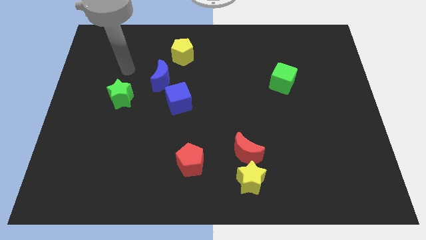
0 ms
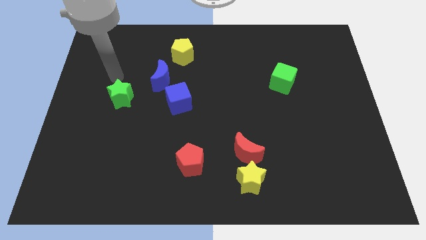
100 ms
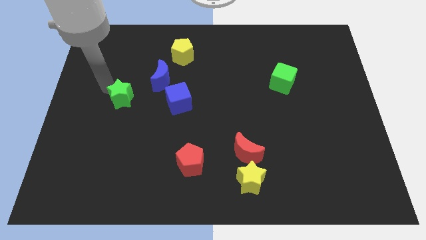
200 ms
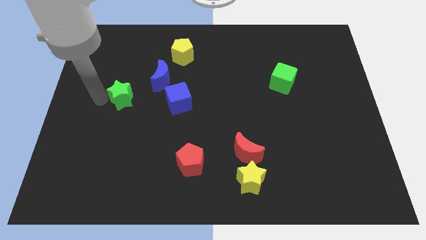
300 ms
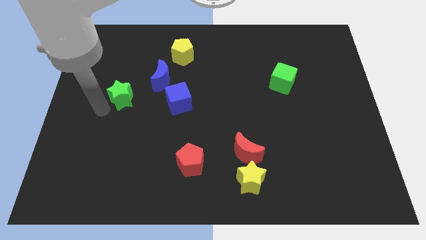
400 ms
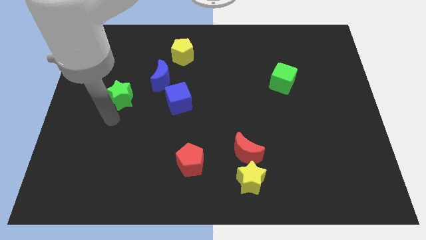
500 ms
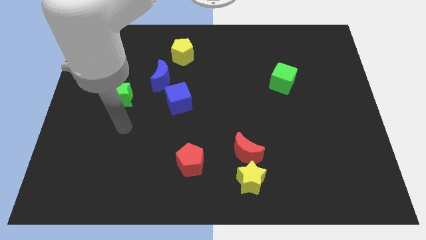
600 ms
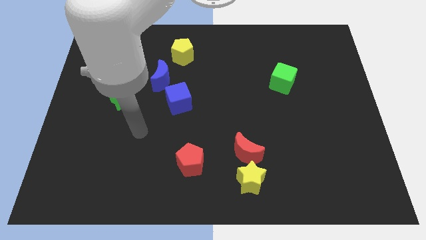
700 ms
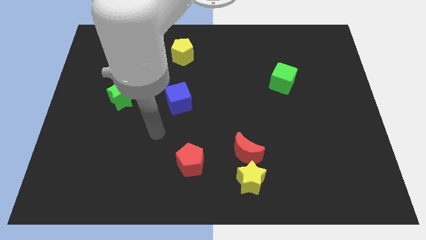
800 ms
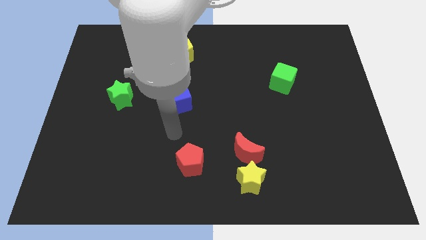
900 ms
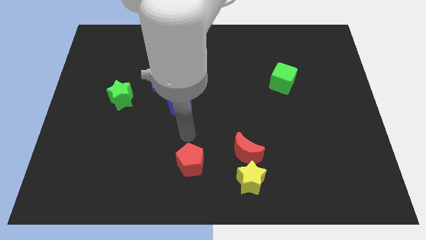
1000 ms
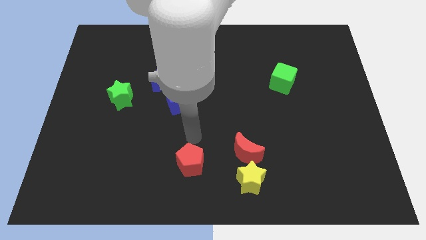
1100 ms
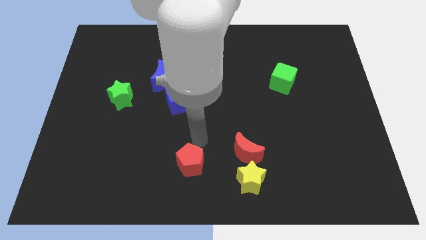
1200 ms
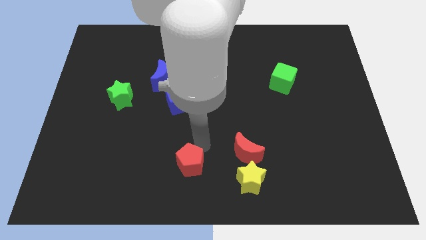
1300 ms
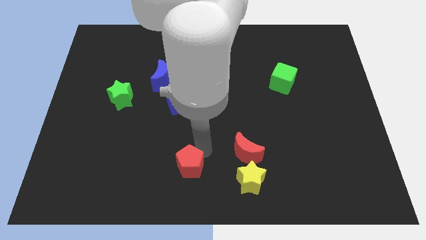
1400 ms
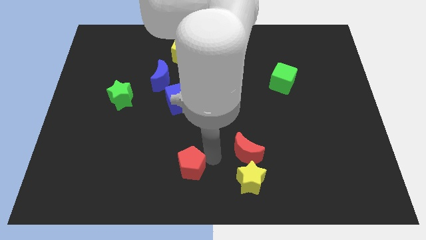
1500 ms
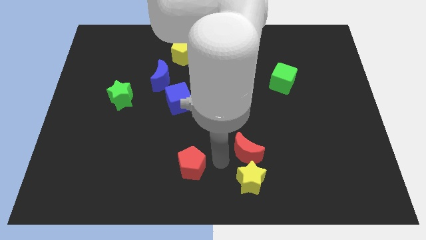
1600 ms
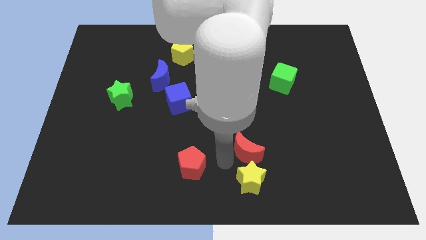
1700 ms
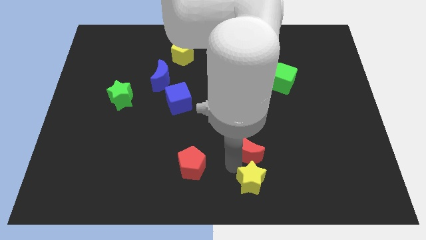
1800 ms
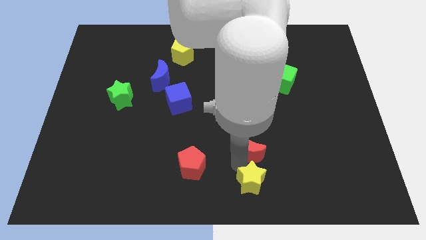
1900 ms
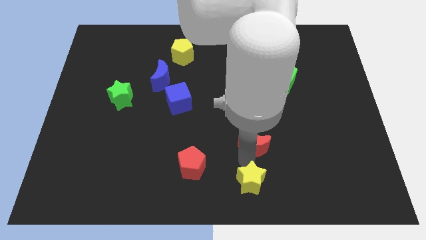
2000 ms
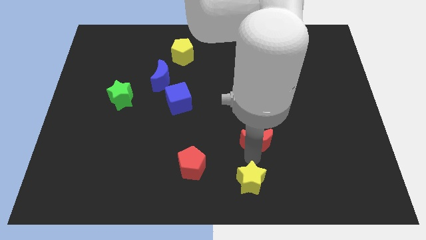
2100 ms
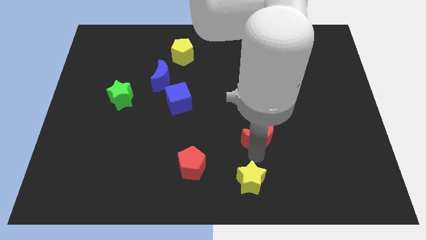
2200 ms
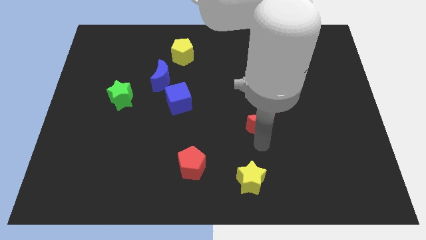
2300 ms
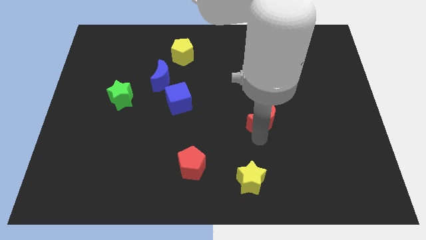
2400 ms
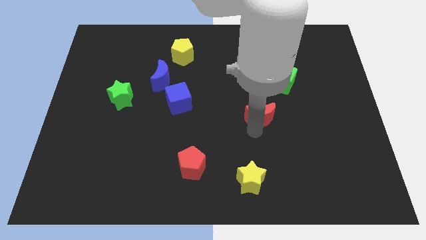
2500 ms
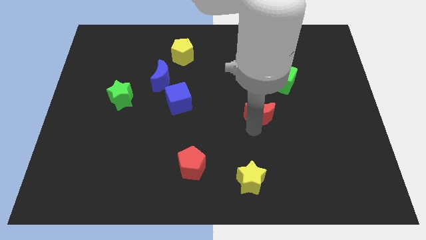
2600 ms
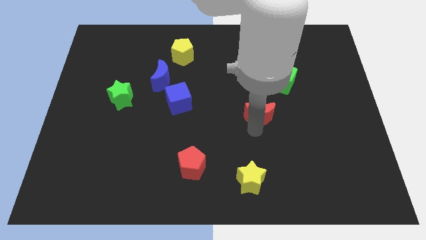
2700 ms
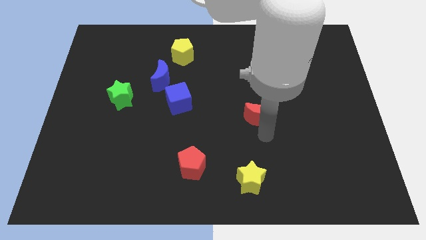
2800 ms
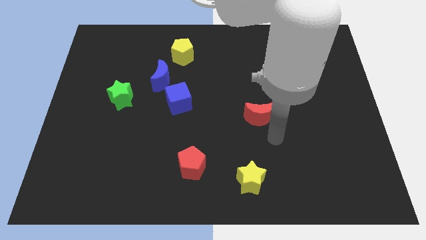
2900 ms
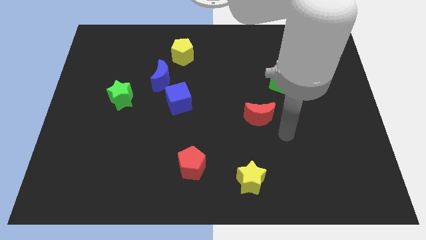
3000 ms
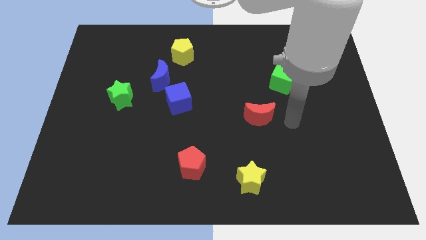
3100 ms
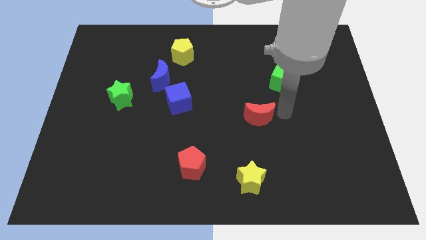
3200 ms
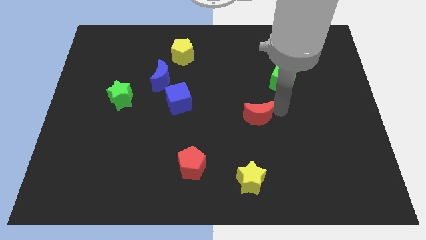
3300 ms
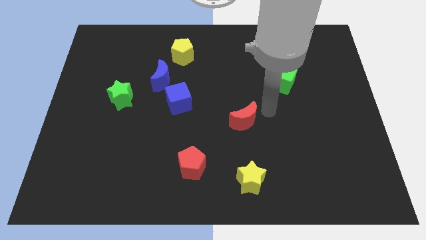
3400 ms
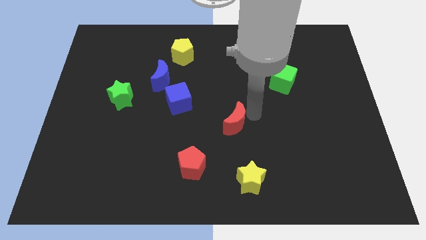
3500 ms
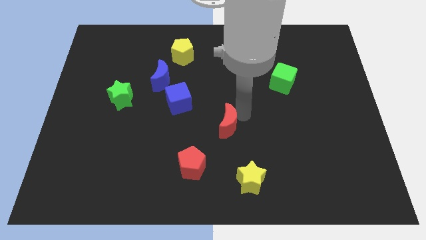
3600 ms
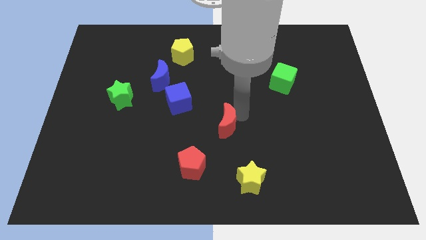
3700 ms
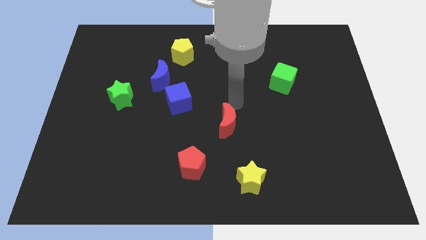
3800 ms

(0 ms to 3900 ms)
move the red crescent diagonally top right to the red pentagon

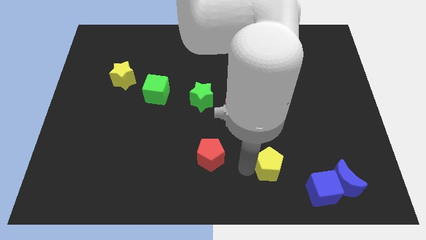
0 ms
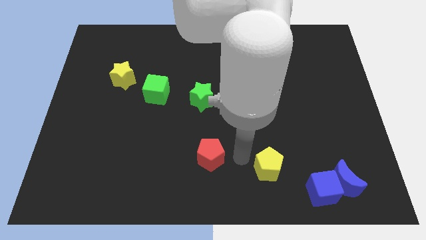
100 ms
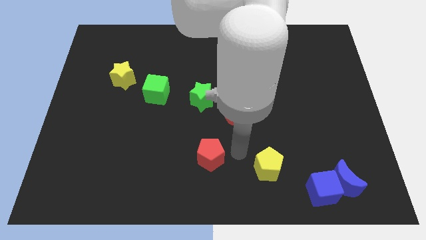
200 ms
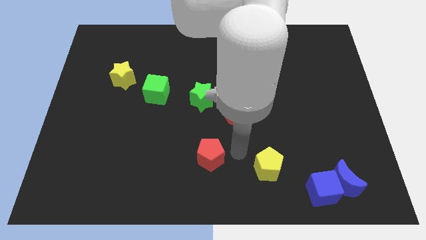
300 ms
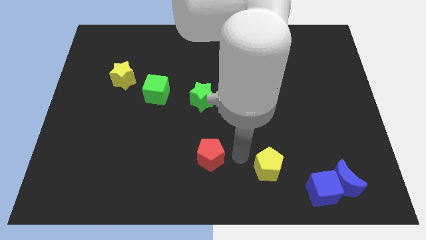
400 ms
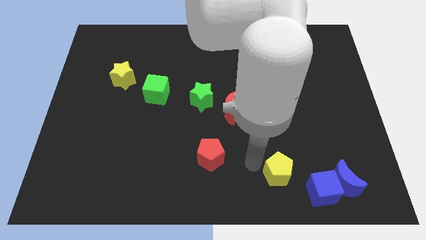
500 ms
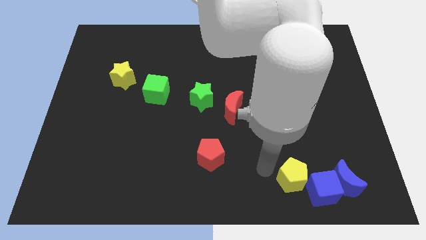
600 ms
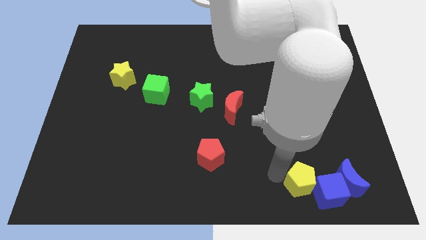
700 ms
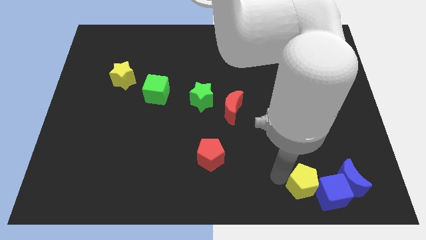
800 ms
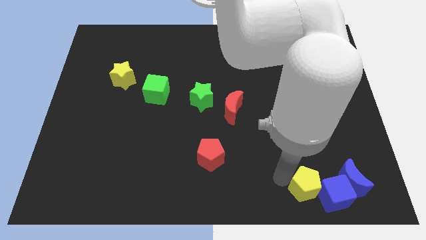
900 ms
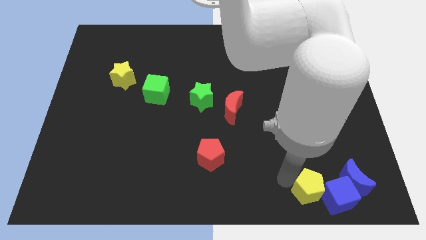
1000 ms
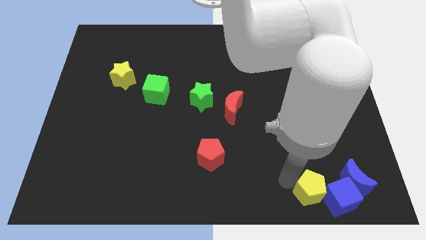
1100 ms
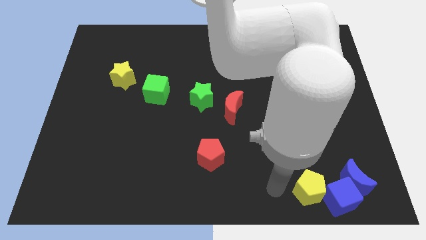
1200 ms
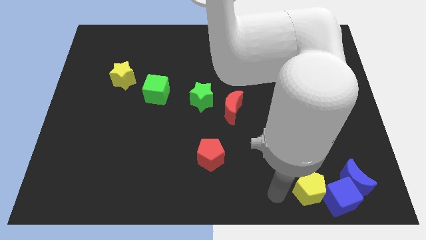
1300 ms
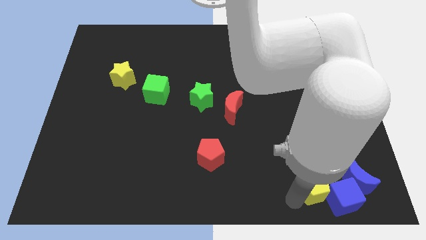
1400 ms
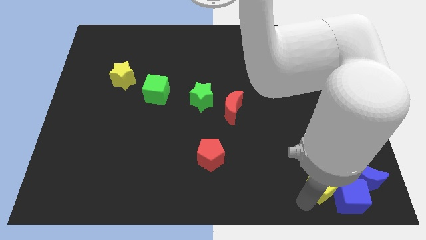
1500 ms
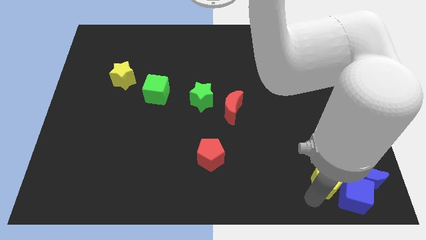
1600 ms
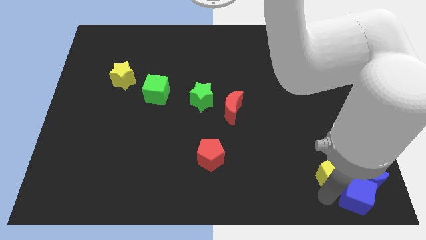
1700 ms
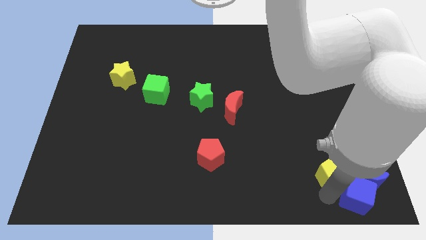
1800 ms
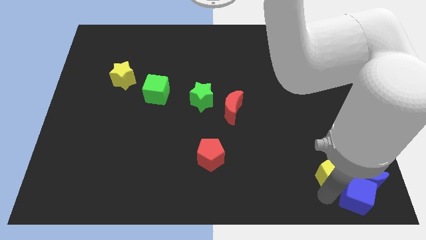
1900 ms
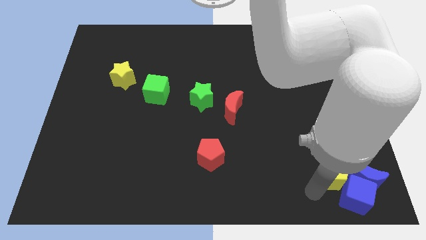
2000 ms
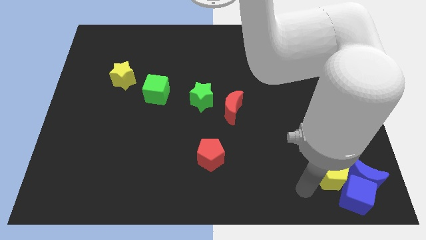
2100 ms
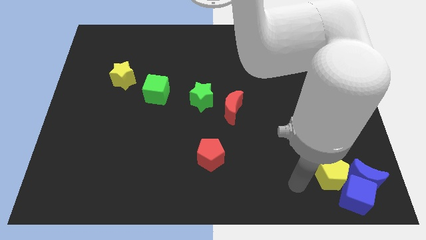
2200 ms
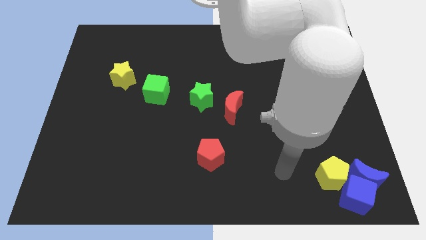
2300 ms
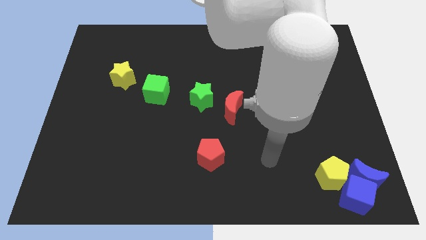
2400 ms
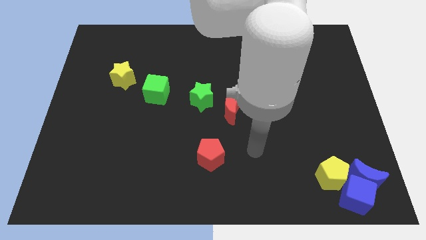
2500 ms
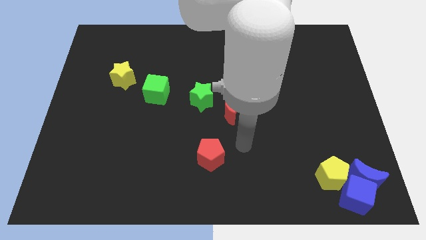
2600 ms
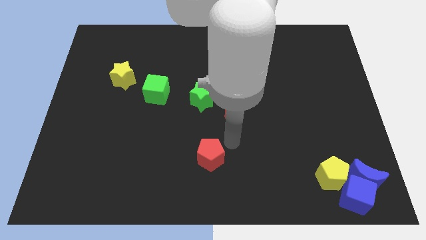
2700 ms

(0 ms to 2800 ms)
move yellow pentagon close to blue blocks

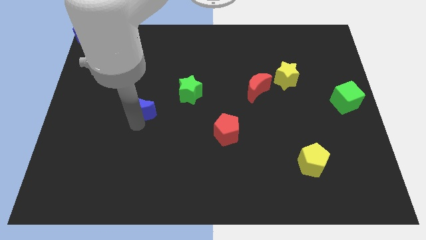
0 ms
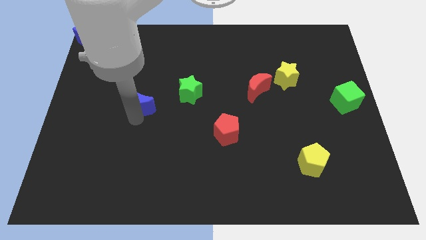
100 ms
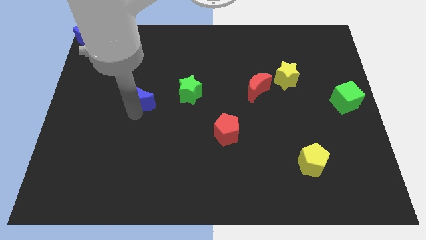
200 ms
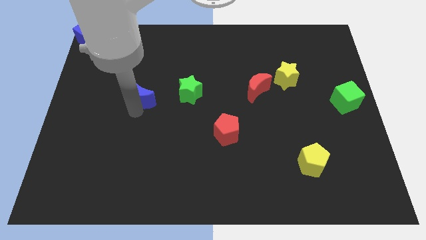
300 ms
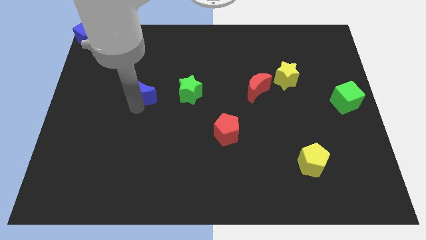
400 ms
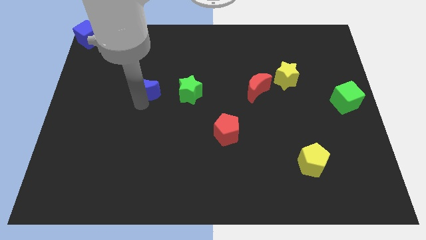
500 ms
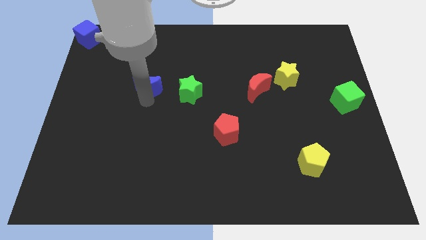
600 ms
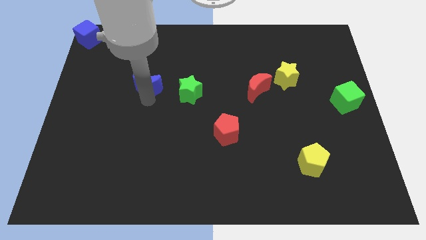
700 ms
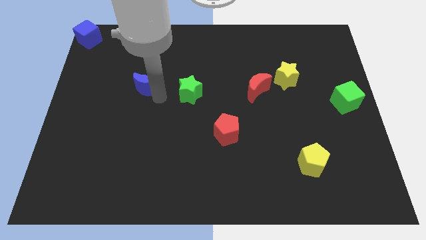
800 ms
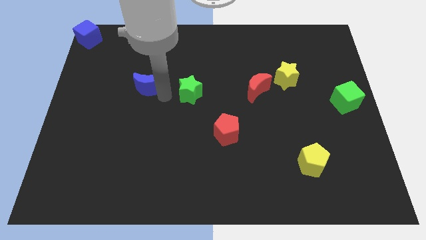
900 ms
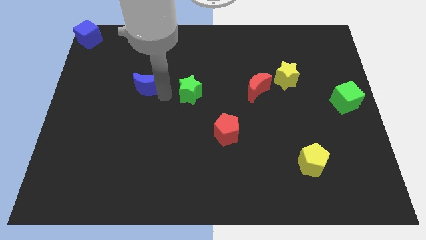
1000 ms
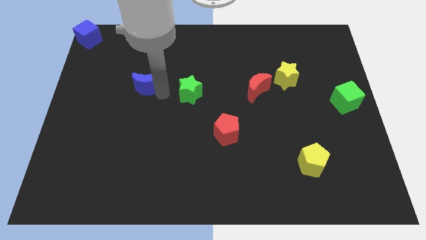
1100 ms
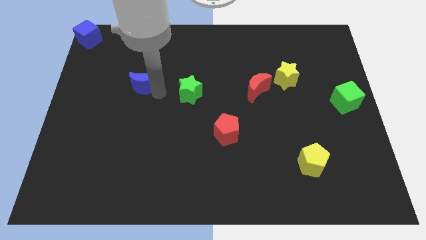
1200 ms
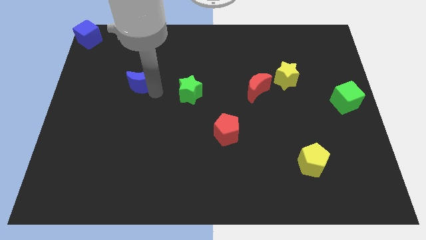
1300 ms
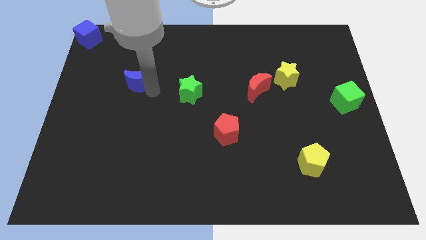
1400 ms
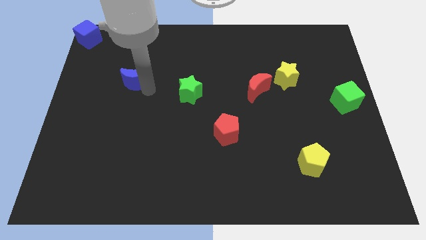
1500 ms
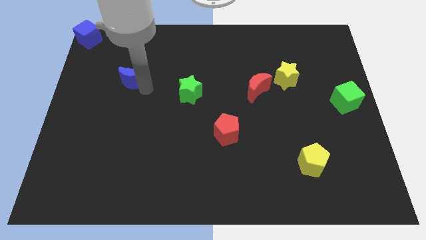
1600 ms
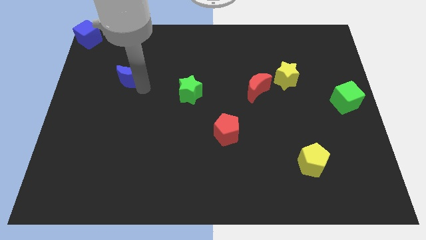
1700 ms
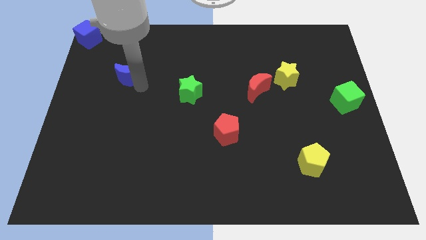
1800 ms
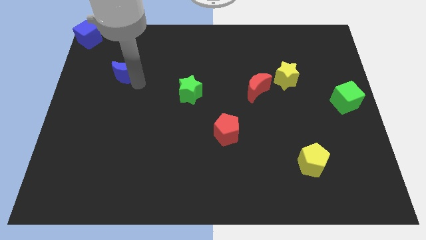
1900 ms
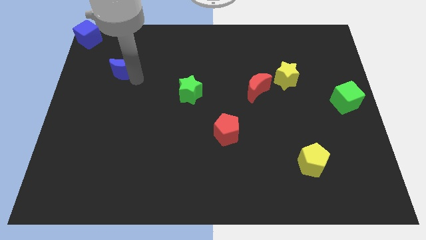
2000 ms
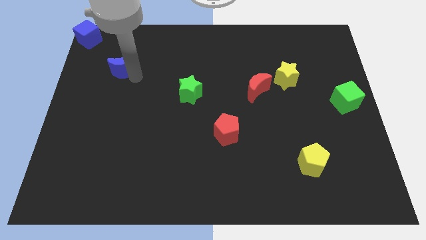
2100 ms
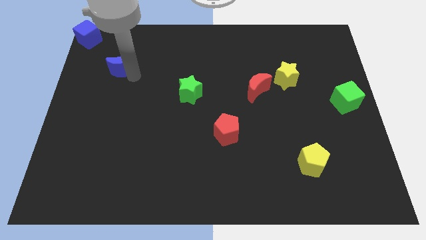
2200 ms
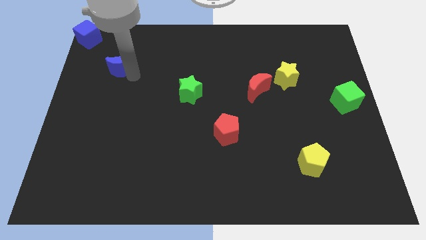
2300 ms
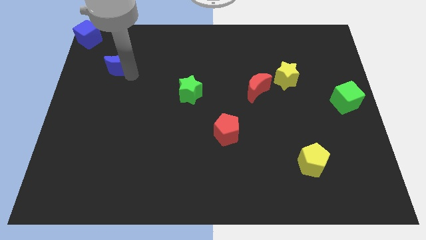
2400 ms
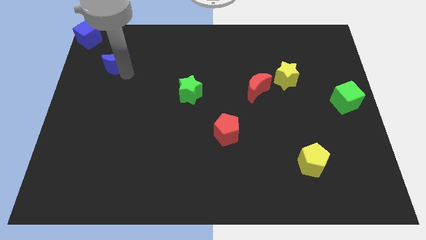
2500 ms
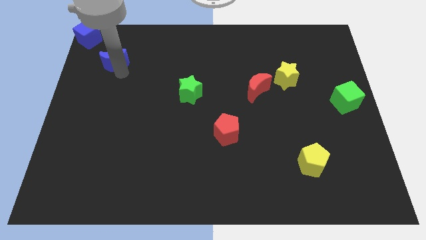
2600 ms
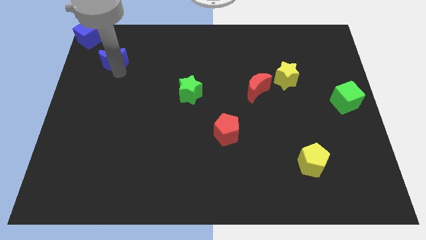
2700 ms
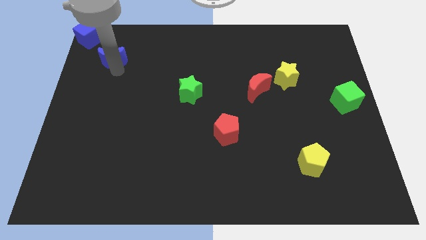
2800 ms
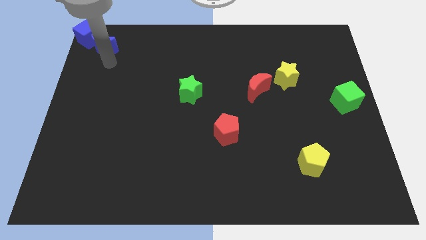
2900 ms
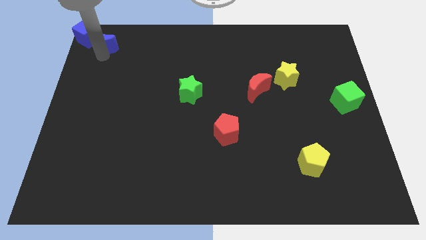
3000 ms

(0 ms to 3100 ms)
move blue moon into blue cube
